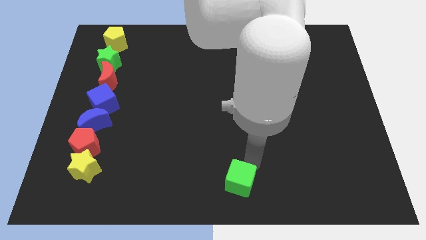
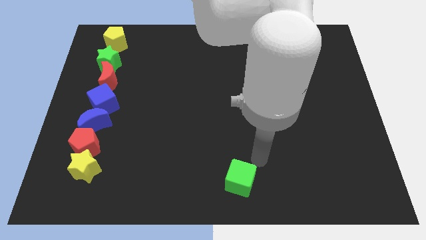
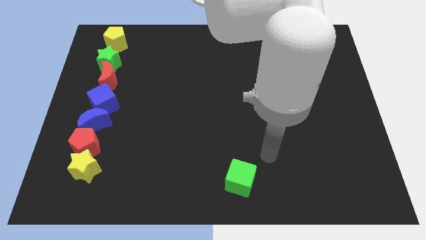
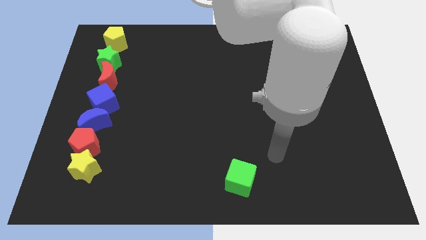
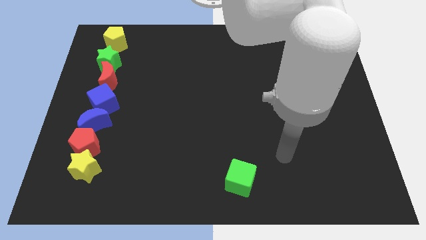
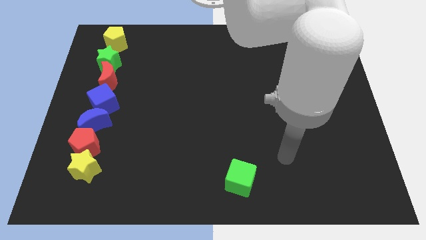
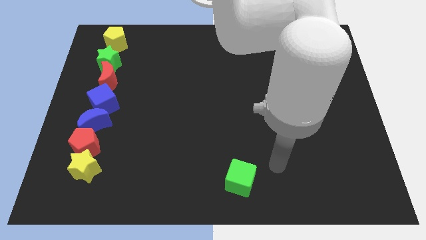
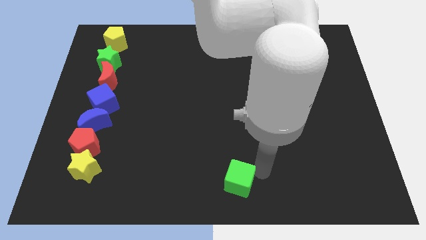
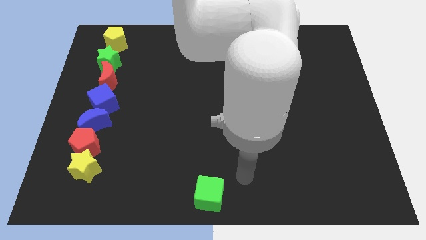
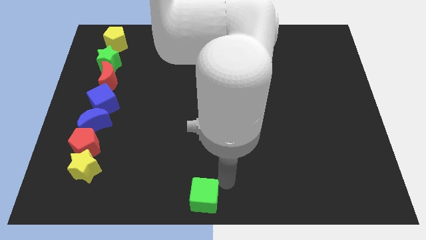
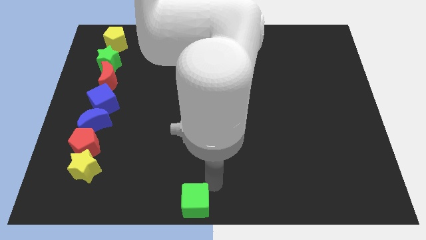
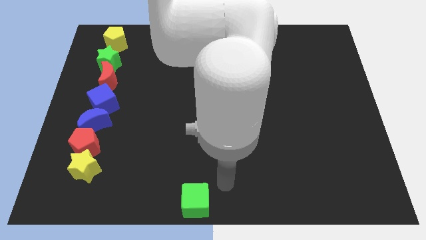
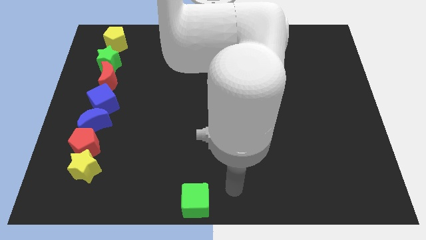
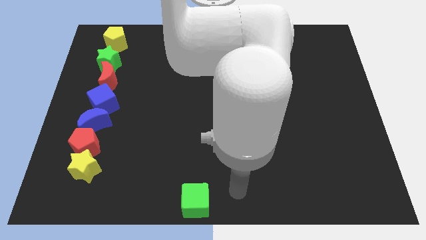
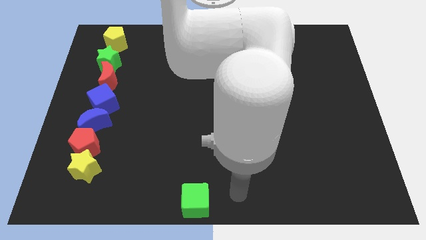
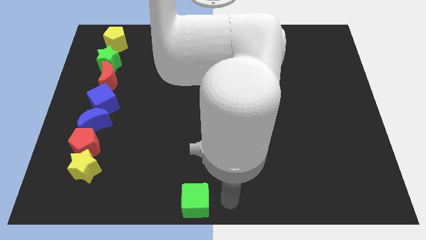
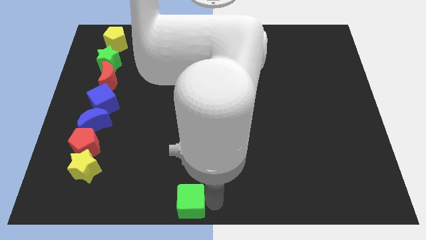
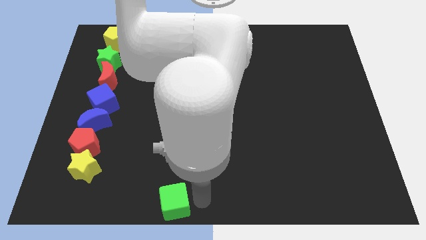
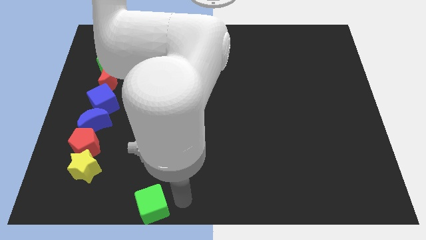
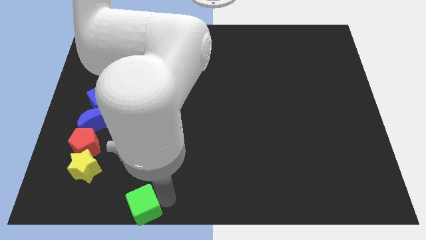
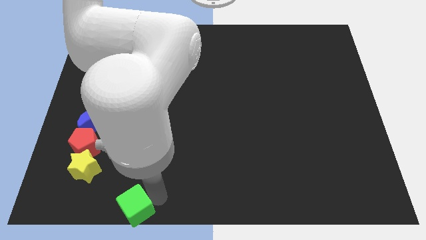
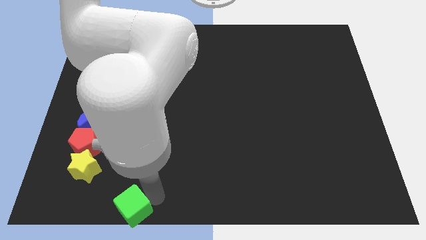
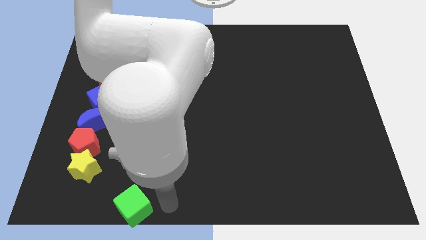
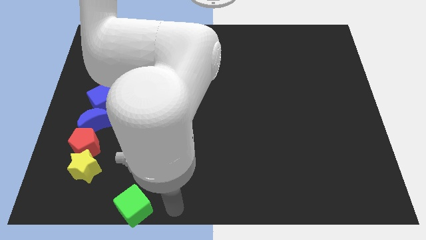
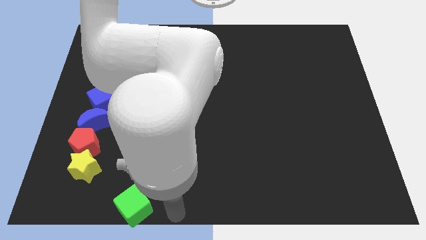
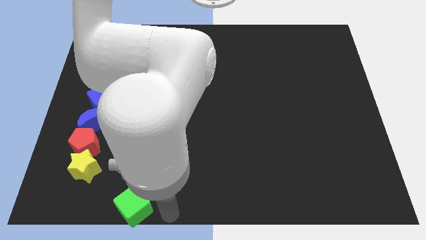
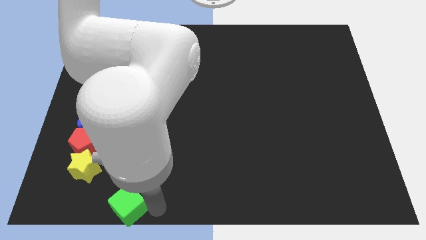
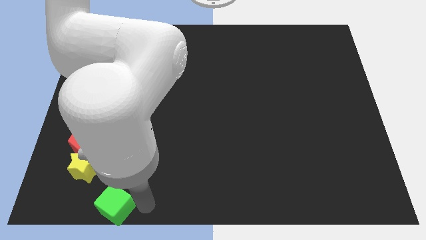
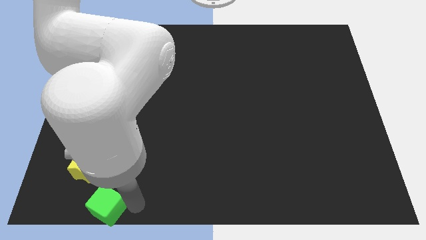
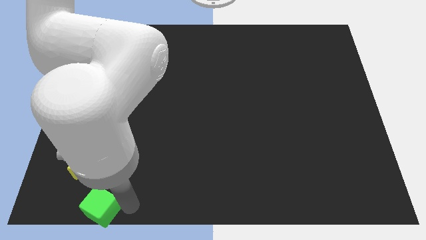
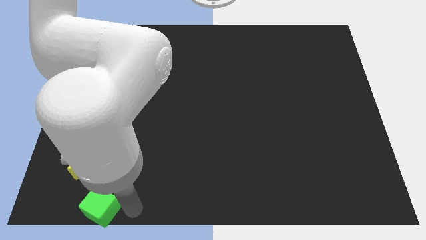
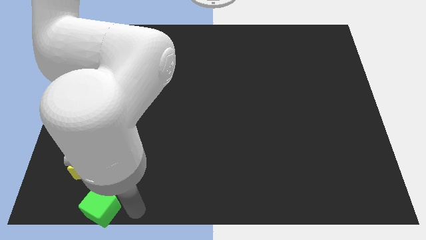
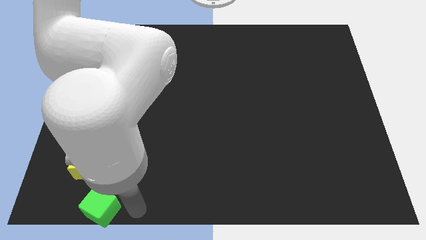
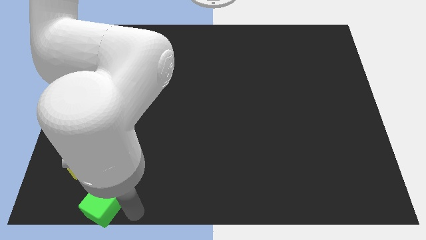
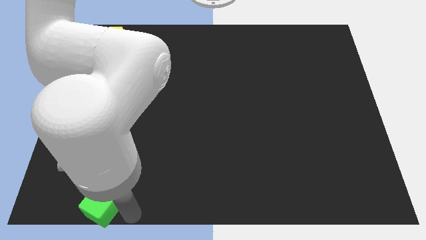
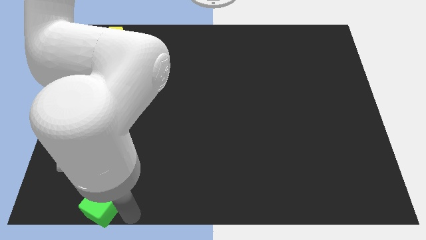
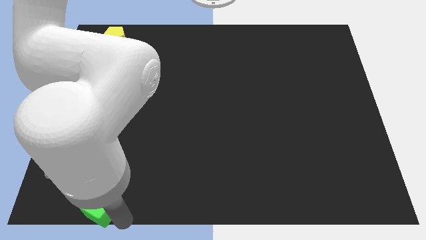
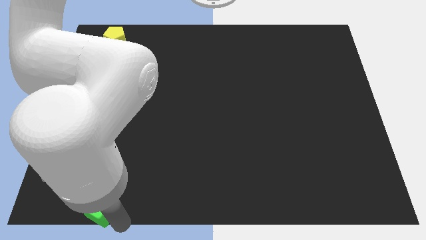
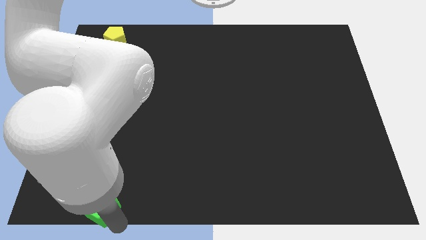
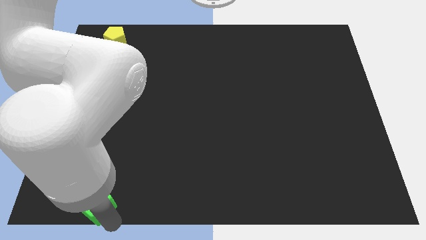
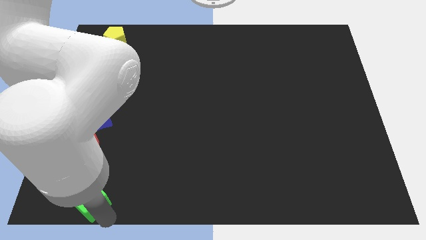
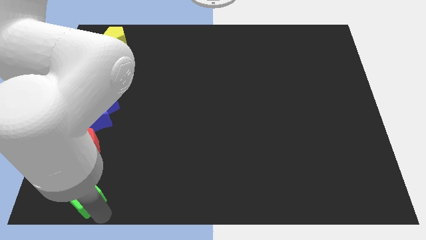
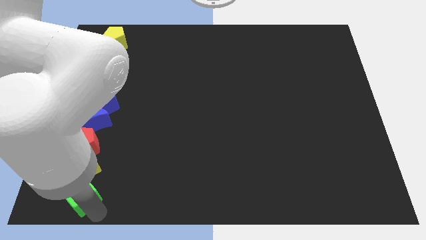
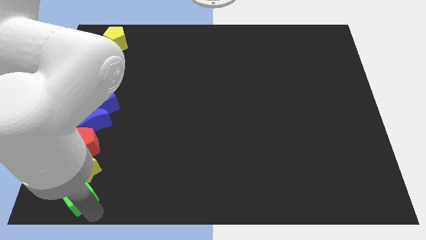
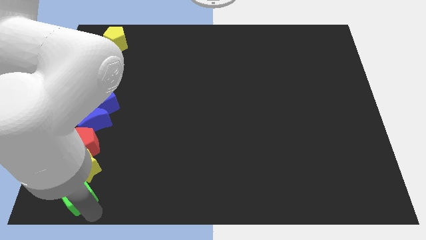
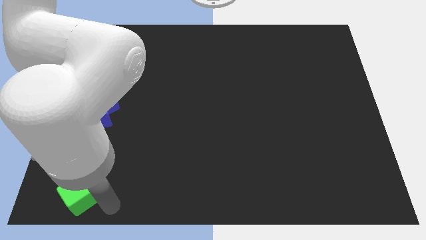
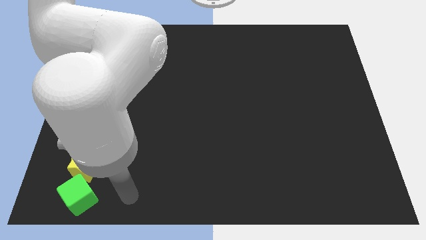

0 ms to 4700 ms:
move the green cube below the yellow star

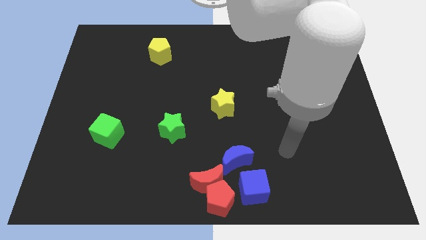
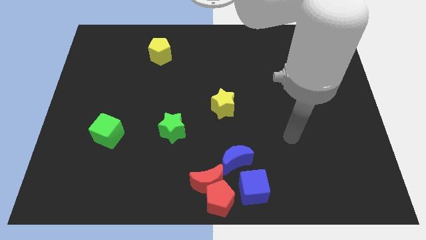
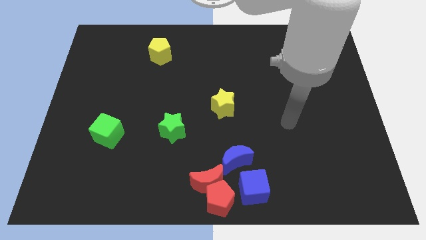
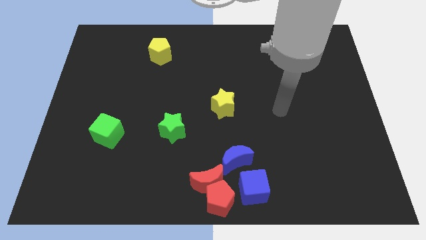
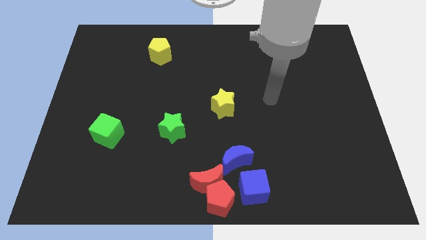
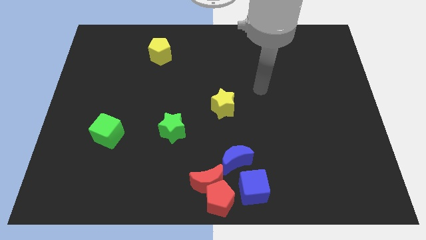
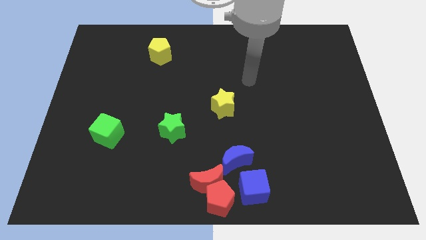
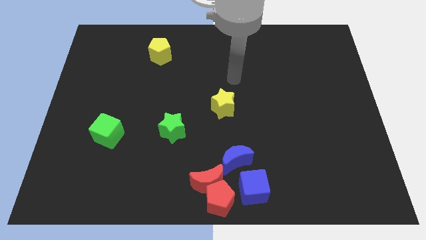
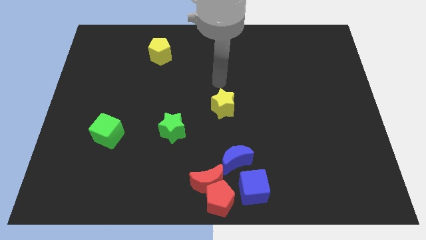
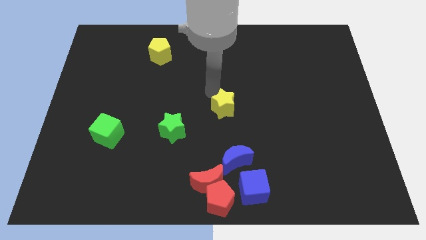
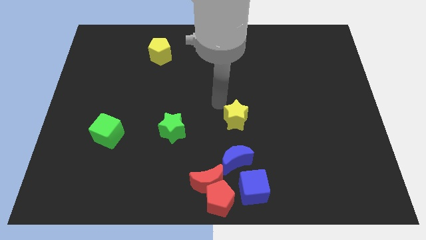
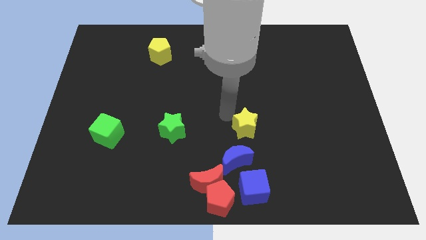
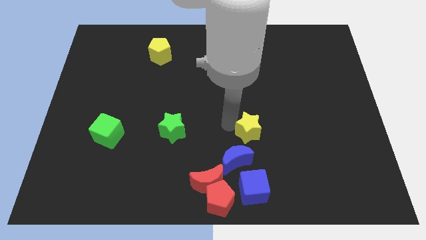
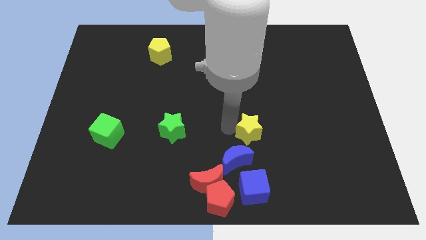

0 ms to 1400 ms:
push the yellow star into the blue moon

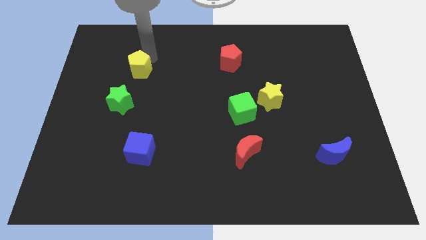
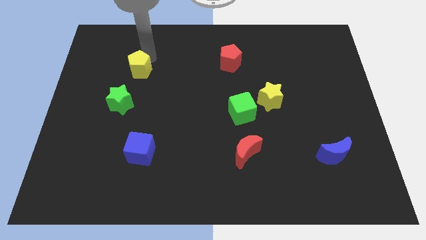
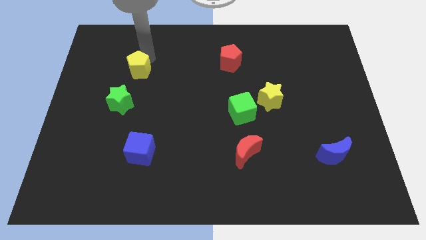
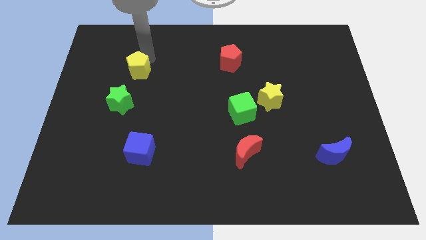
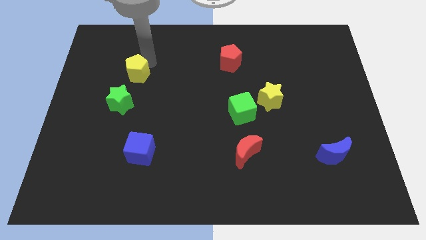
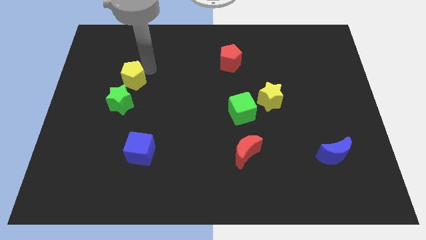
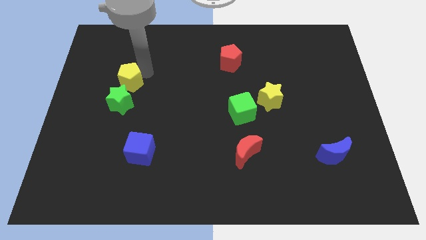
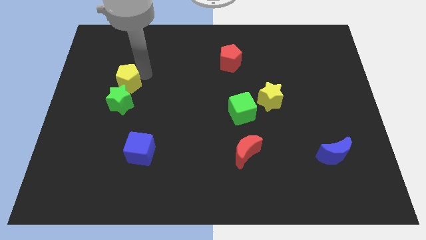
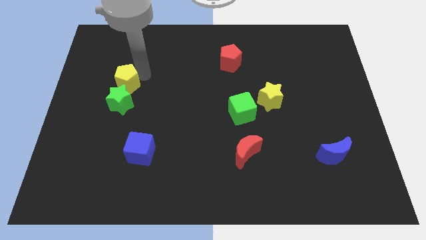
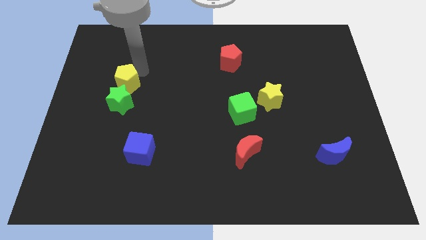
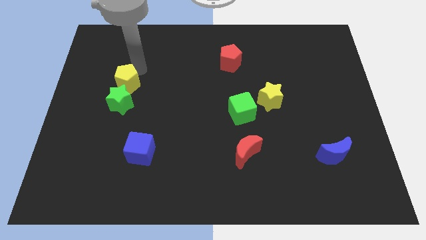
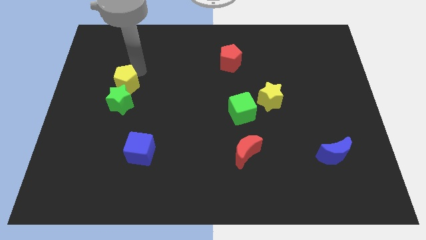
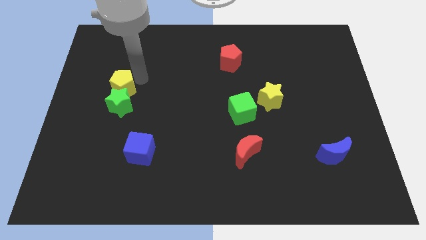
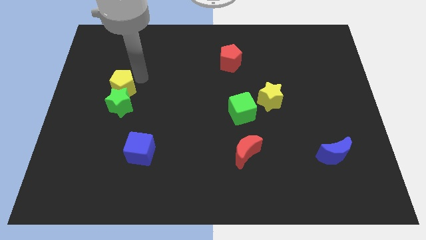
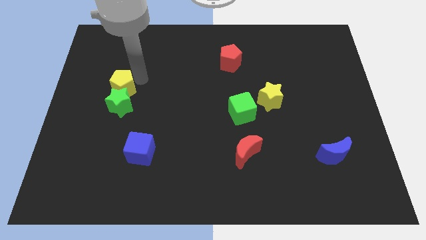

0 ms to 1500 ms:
move the yellow pentagon into the green star

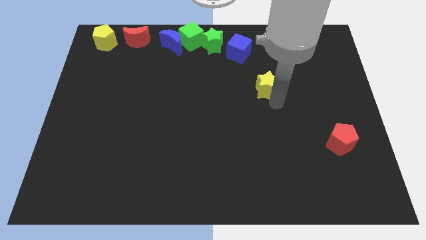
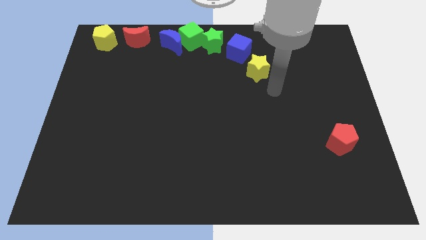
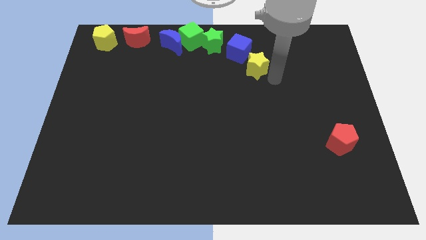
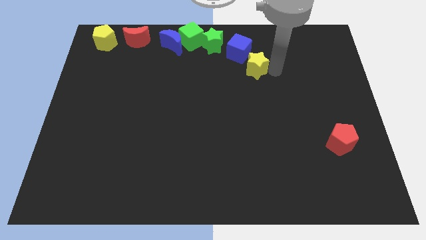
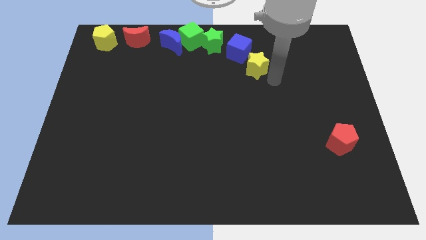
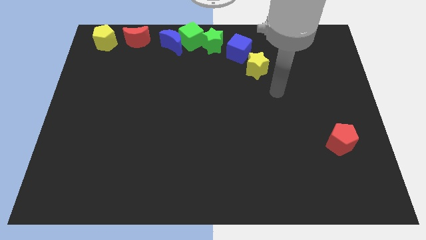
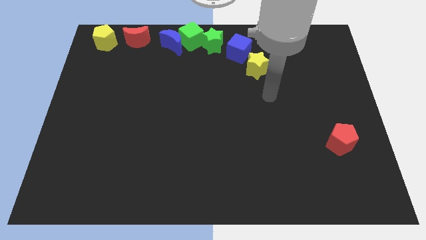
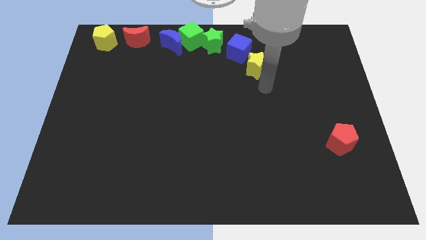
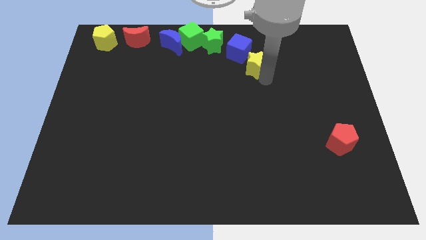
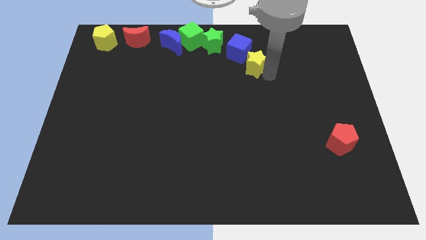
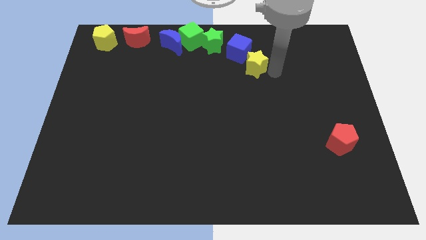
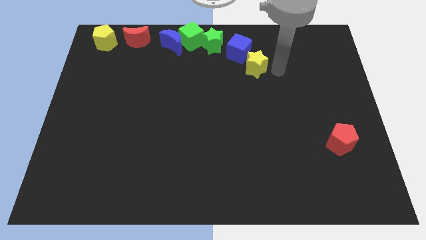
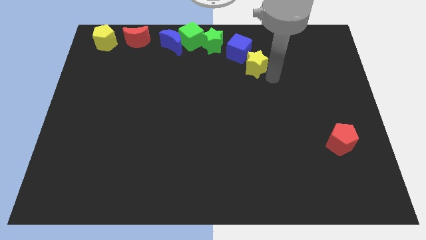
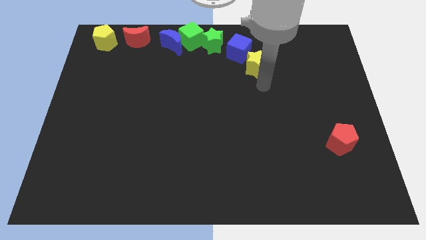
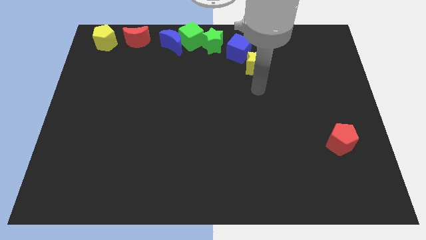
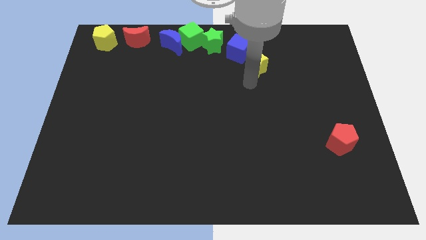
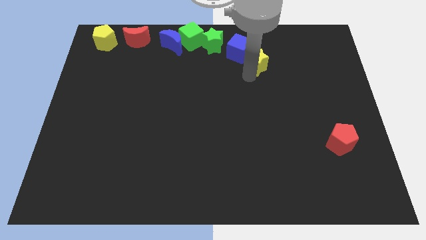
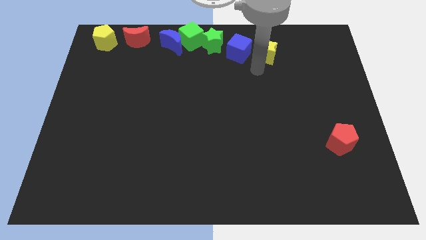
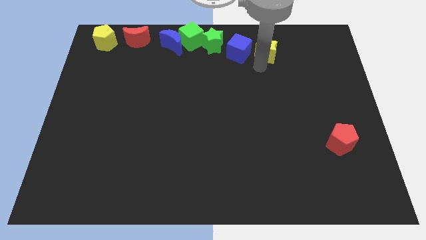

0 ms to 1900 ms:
put the yellow star right to the blue cube
